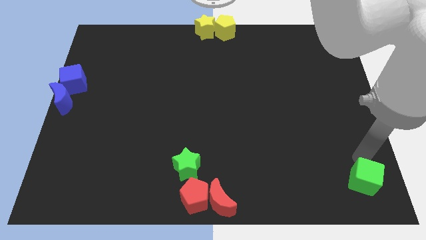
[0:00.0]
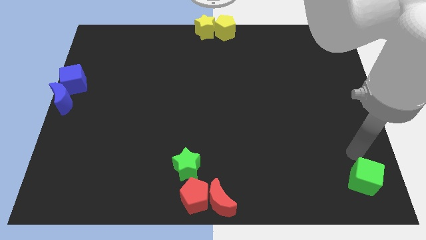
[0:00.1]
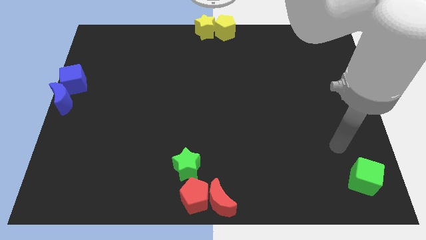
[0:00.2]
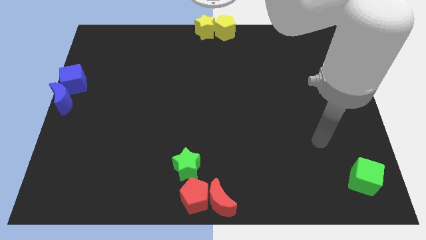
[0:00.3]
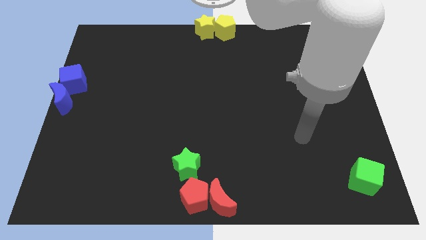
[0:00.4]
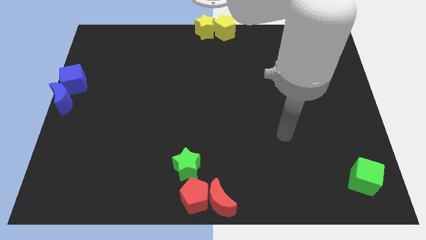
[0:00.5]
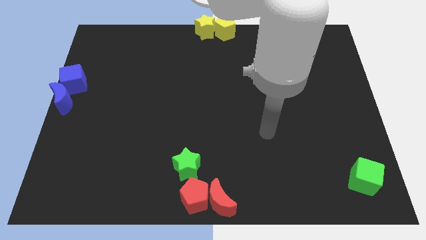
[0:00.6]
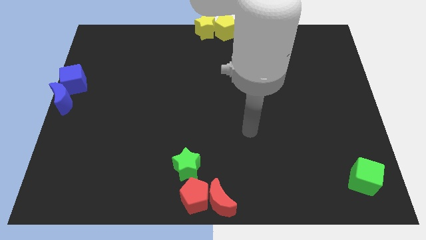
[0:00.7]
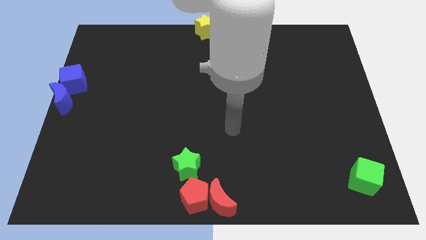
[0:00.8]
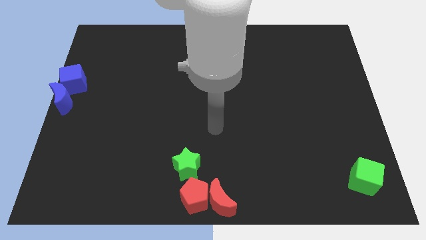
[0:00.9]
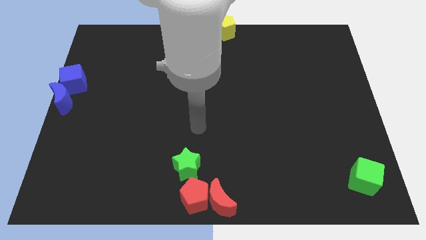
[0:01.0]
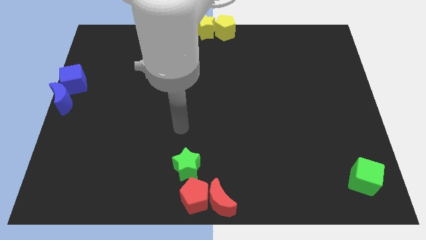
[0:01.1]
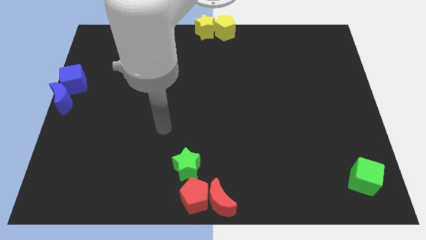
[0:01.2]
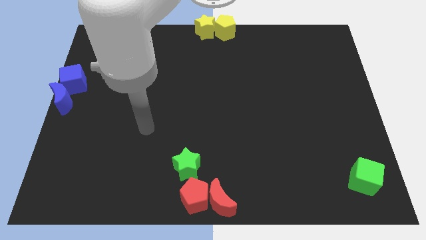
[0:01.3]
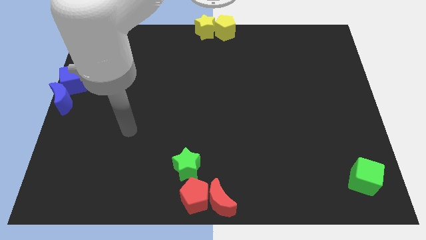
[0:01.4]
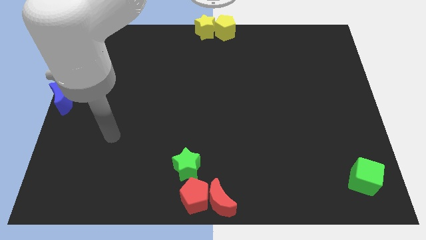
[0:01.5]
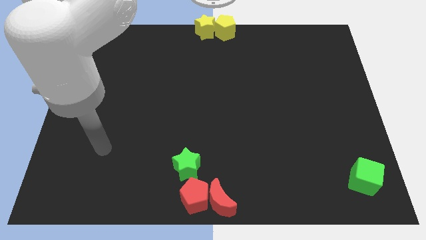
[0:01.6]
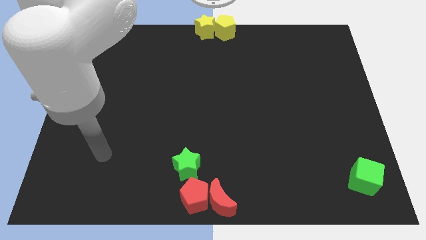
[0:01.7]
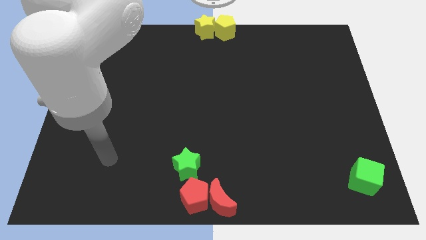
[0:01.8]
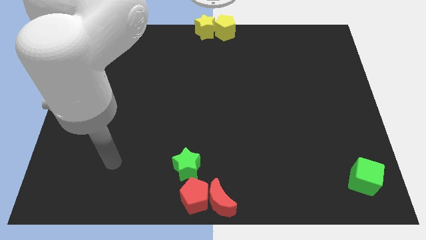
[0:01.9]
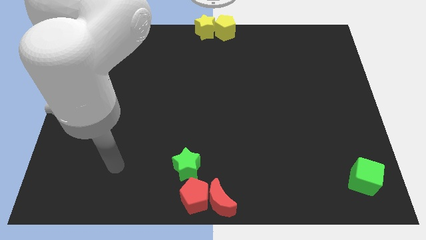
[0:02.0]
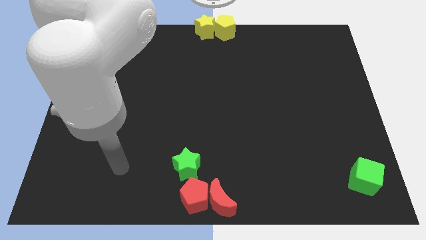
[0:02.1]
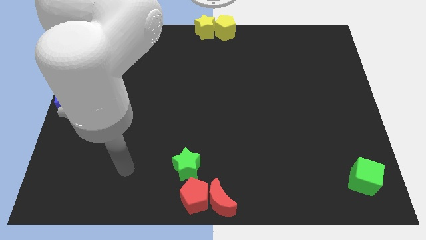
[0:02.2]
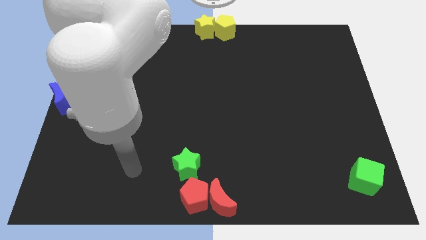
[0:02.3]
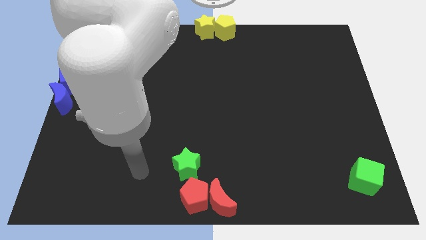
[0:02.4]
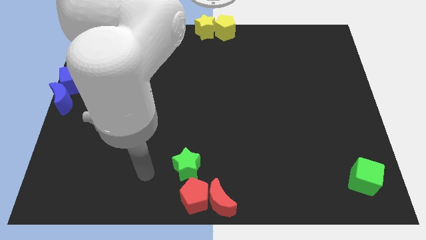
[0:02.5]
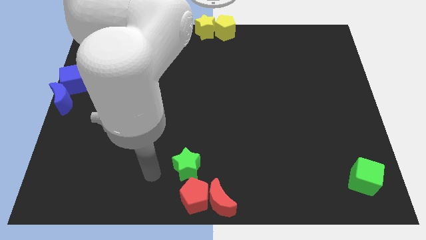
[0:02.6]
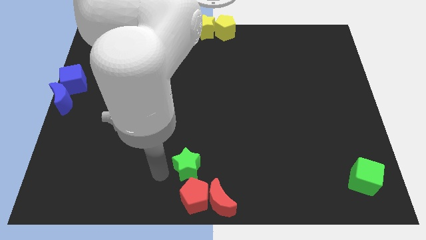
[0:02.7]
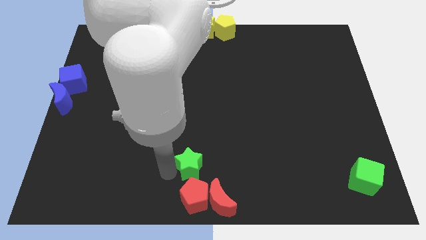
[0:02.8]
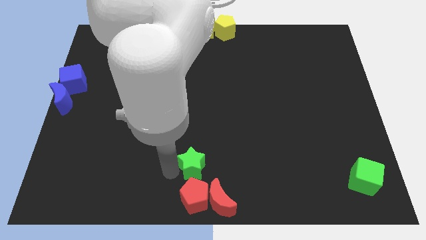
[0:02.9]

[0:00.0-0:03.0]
move the arm to the left of the green star

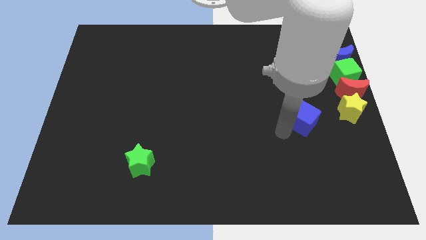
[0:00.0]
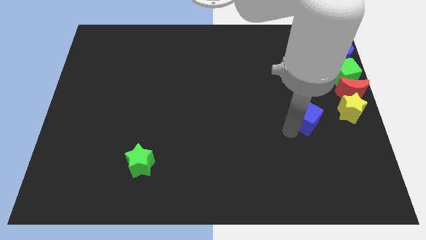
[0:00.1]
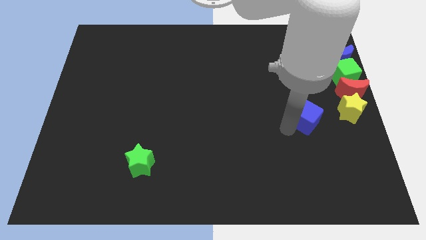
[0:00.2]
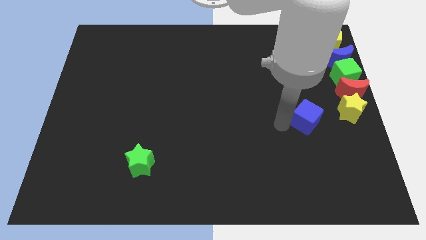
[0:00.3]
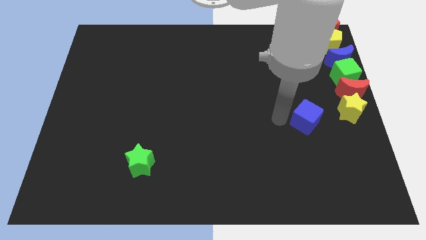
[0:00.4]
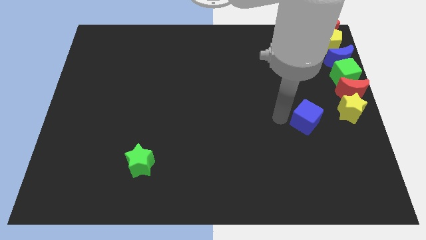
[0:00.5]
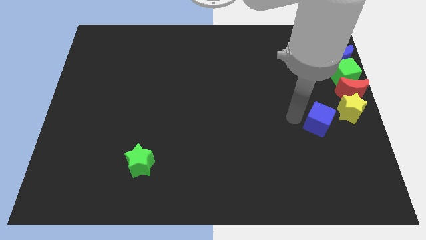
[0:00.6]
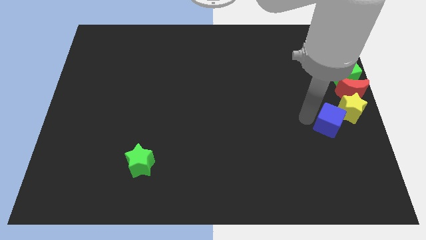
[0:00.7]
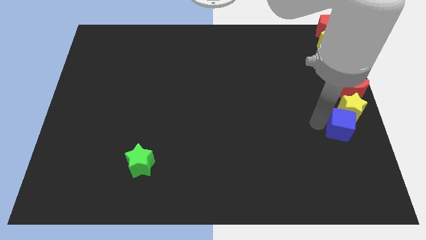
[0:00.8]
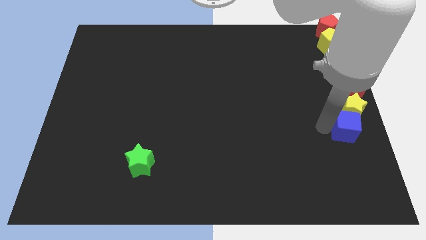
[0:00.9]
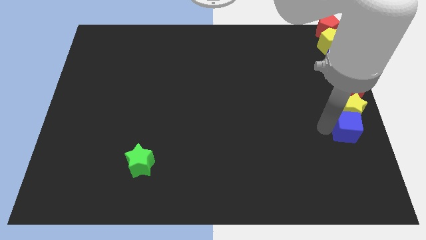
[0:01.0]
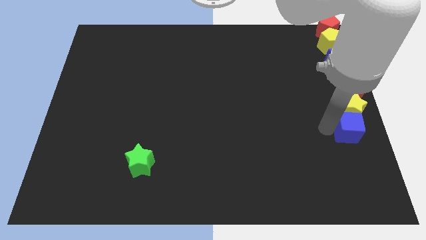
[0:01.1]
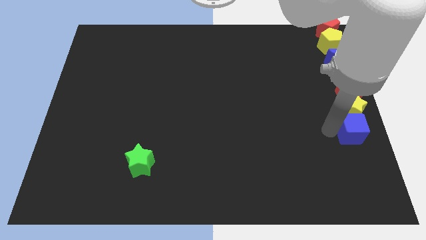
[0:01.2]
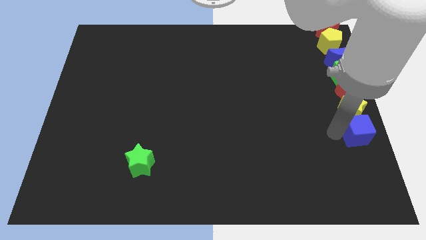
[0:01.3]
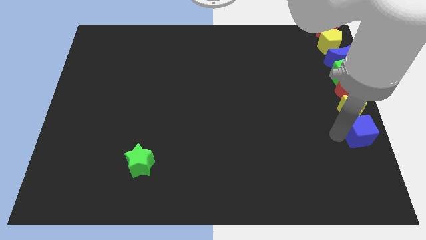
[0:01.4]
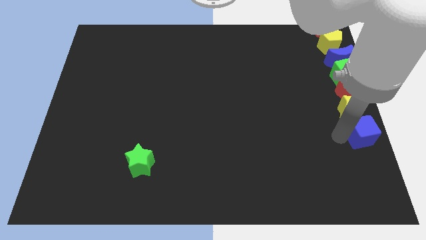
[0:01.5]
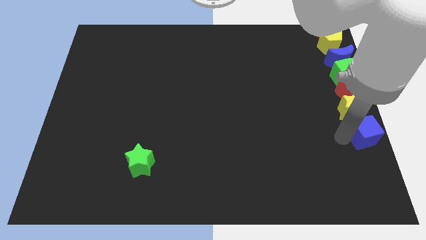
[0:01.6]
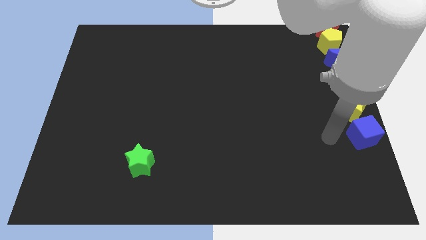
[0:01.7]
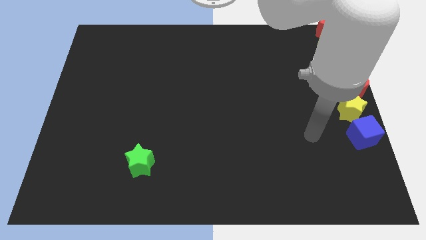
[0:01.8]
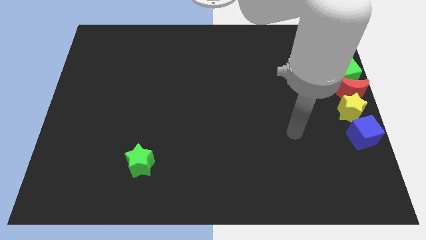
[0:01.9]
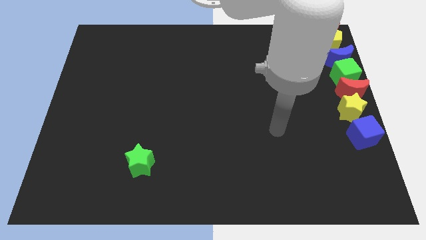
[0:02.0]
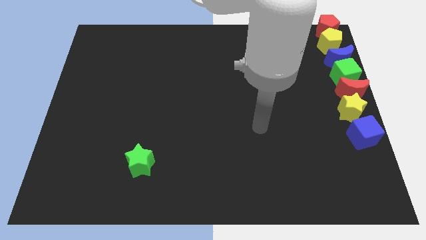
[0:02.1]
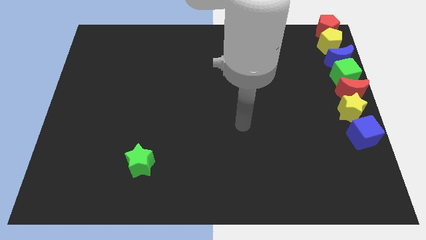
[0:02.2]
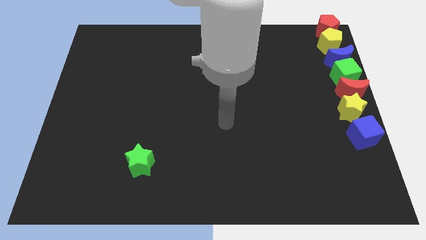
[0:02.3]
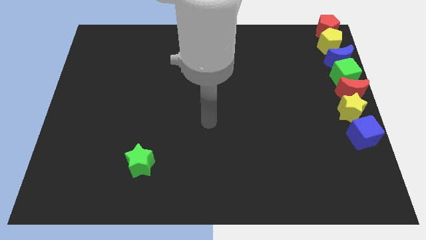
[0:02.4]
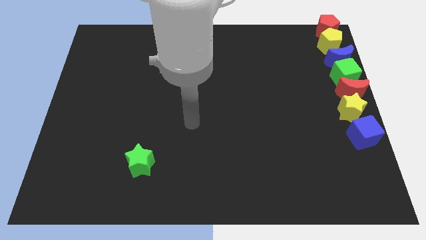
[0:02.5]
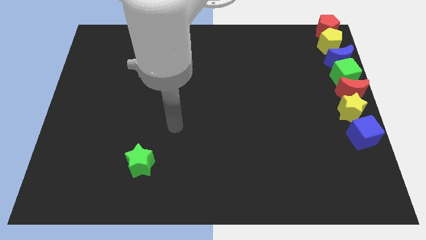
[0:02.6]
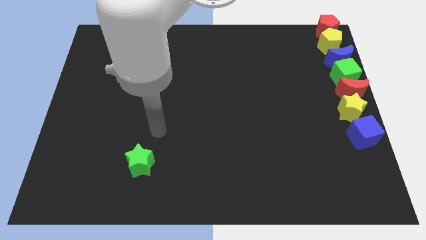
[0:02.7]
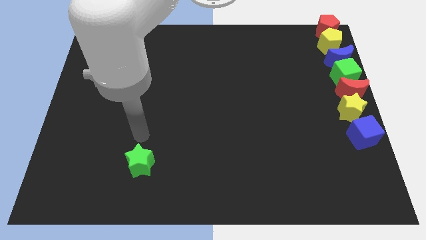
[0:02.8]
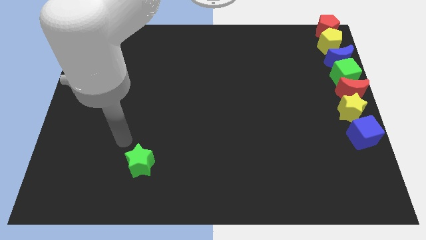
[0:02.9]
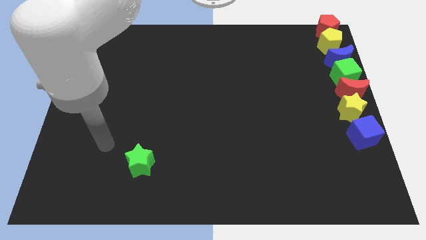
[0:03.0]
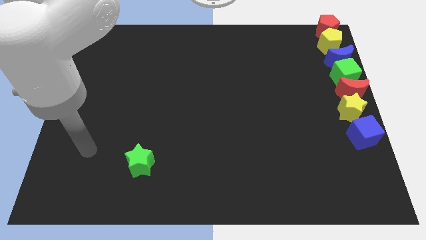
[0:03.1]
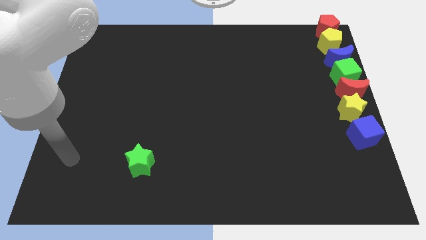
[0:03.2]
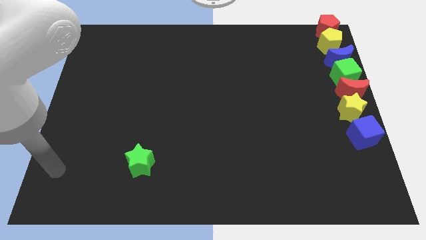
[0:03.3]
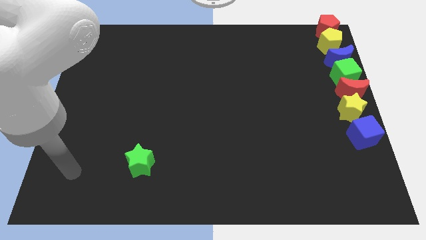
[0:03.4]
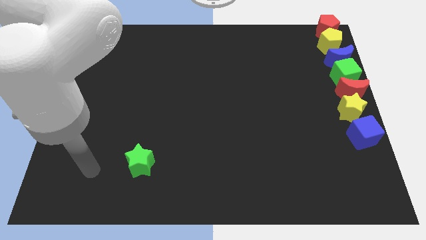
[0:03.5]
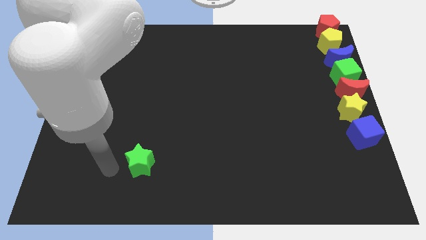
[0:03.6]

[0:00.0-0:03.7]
place the blue cube below the yellow star

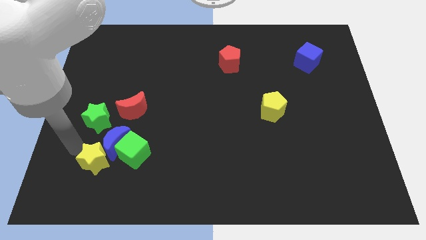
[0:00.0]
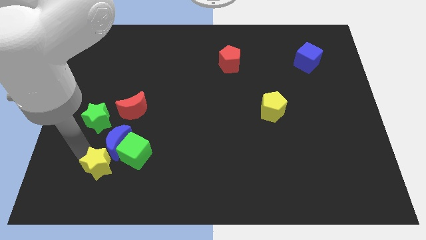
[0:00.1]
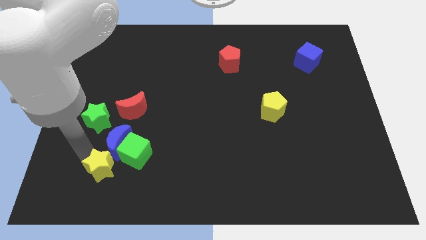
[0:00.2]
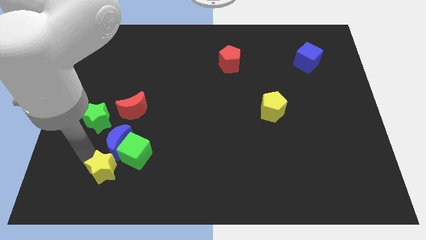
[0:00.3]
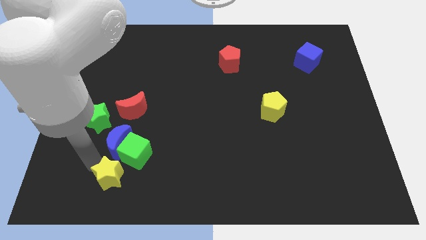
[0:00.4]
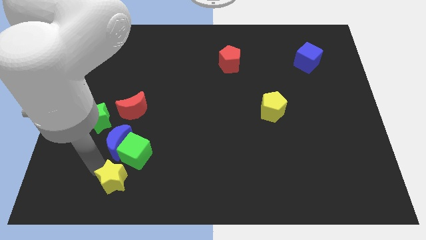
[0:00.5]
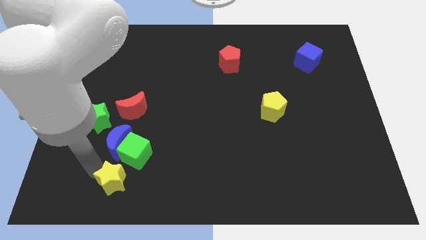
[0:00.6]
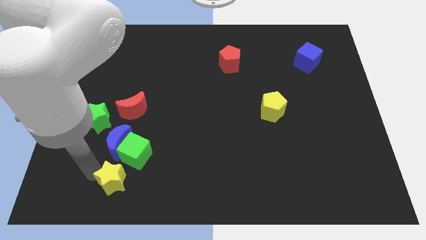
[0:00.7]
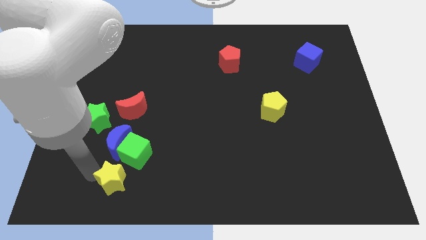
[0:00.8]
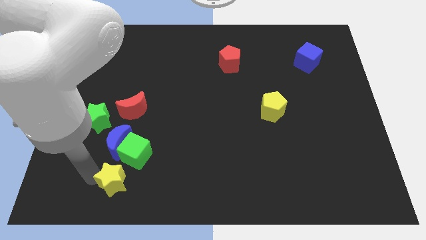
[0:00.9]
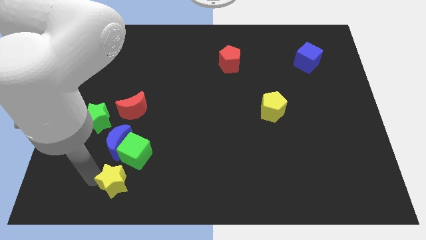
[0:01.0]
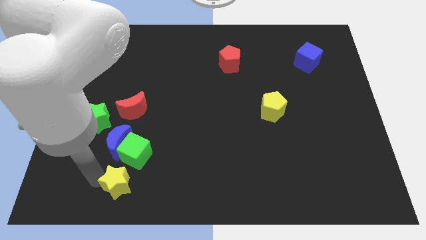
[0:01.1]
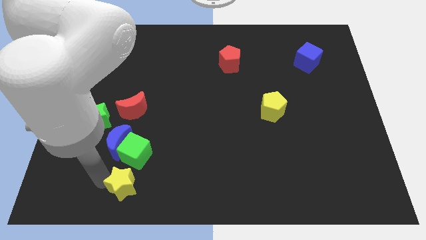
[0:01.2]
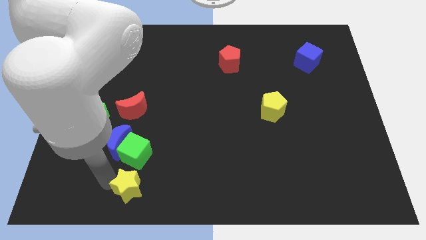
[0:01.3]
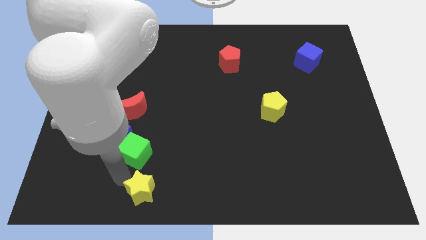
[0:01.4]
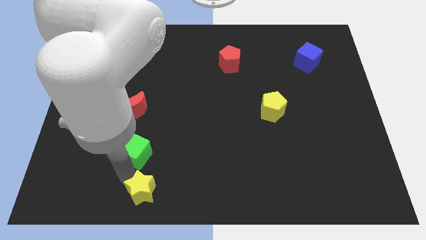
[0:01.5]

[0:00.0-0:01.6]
move the yellow star to the bottom of the green cube

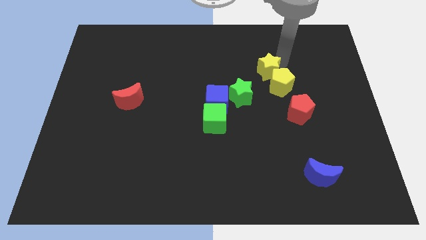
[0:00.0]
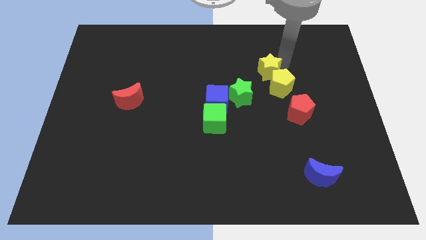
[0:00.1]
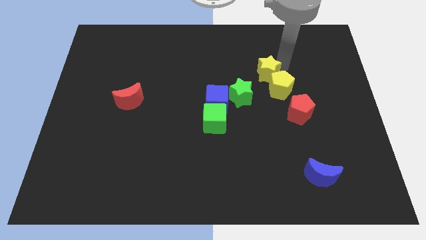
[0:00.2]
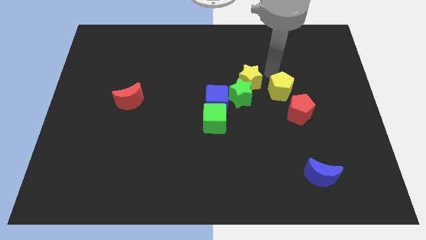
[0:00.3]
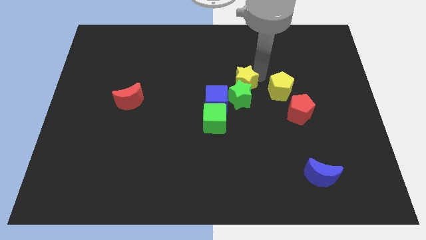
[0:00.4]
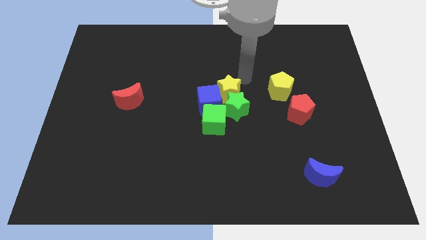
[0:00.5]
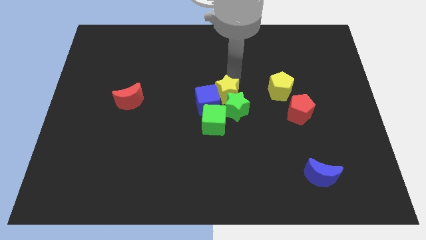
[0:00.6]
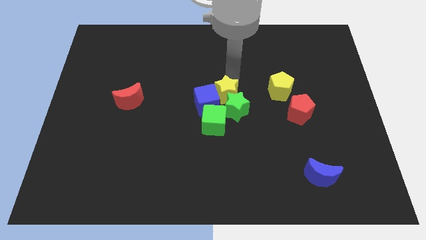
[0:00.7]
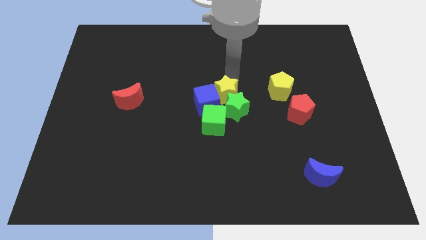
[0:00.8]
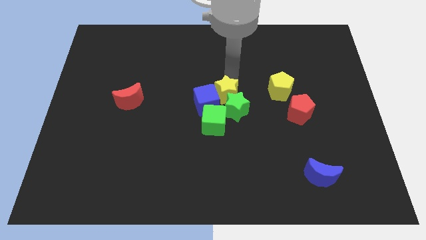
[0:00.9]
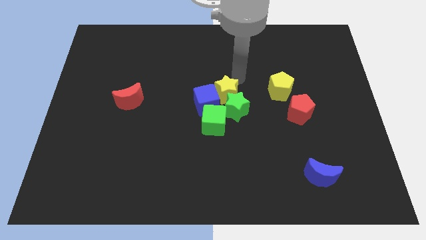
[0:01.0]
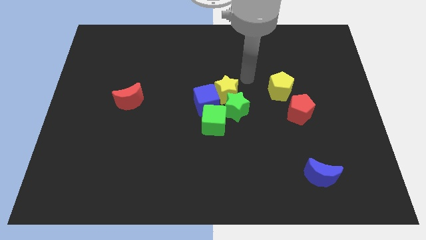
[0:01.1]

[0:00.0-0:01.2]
push the yellow star into the blue cube
